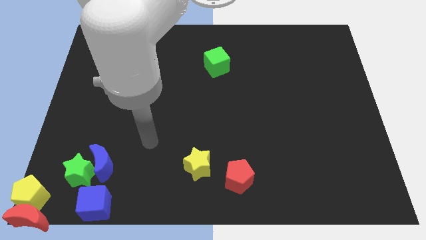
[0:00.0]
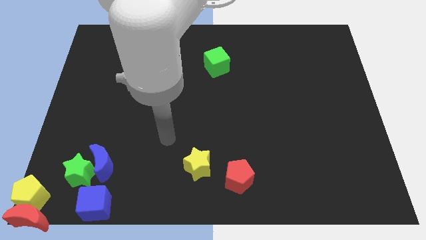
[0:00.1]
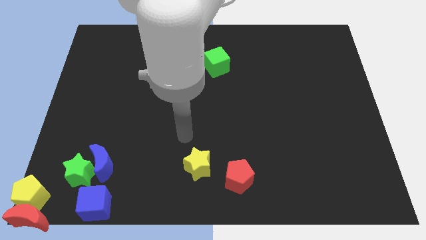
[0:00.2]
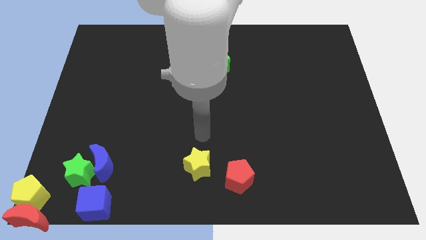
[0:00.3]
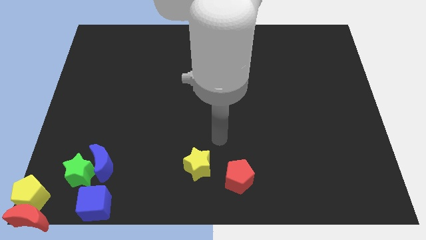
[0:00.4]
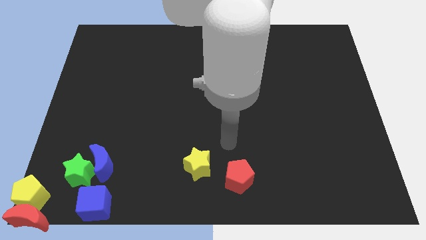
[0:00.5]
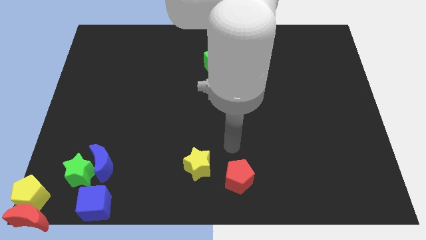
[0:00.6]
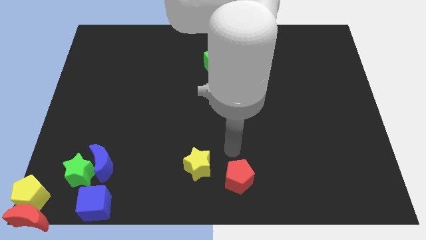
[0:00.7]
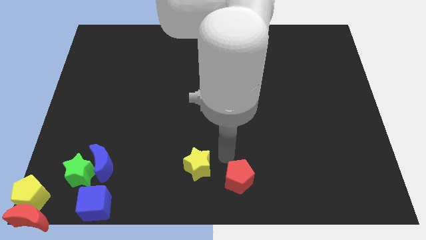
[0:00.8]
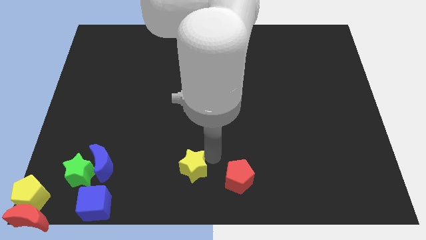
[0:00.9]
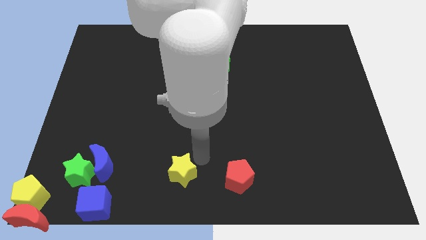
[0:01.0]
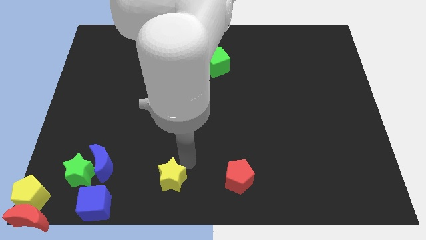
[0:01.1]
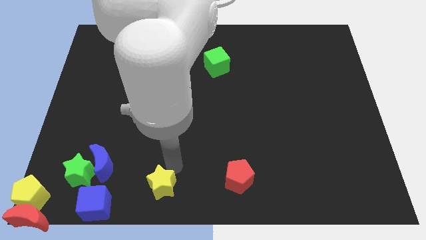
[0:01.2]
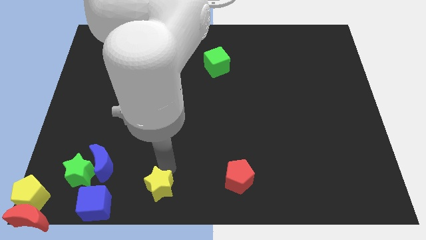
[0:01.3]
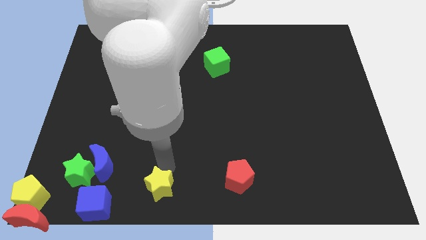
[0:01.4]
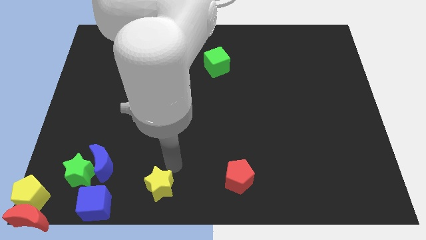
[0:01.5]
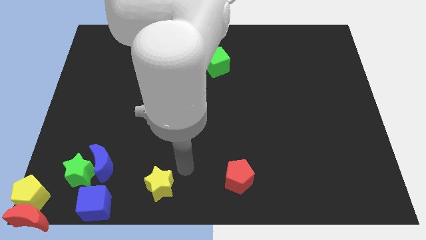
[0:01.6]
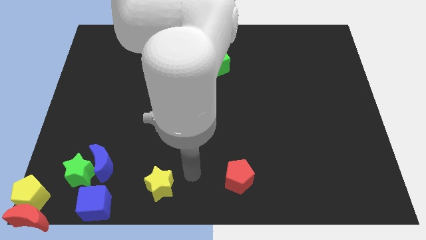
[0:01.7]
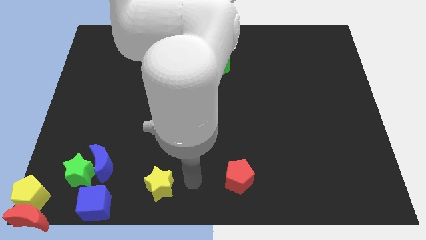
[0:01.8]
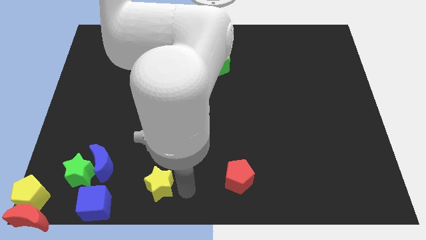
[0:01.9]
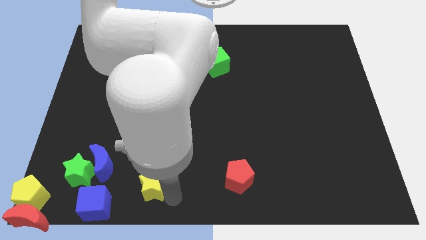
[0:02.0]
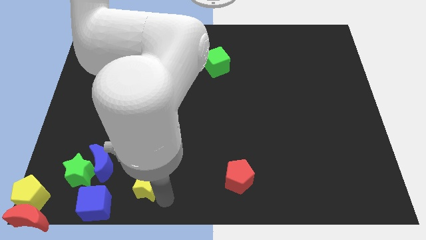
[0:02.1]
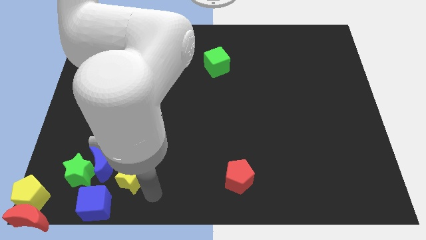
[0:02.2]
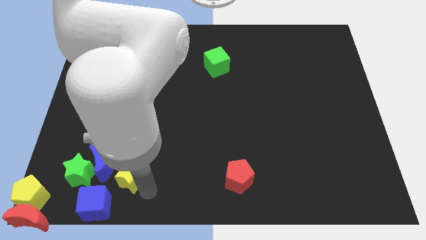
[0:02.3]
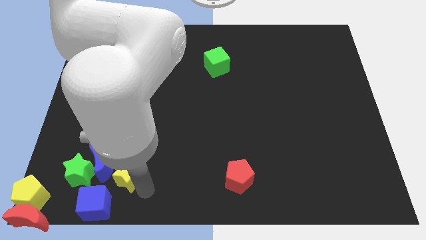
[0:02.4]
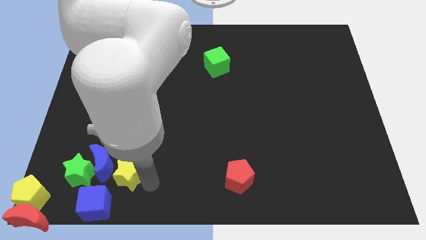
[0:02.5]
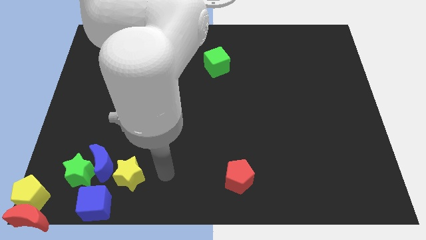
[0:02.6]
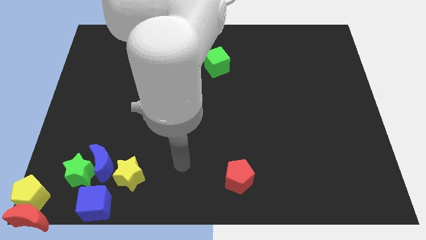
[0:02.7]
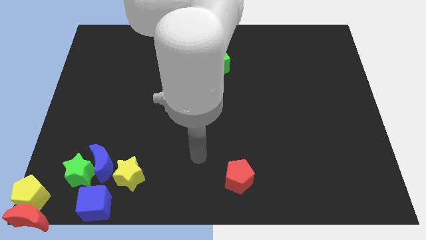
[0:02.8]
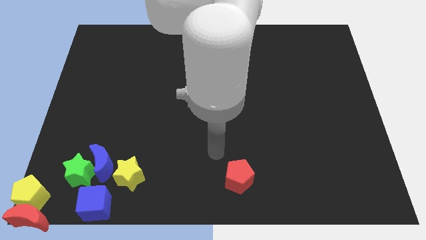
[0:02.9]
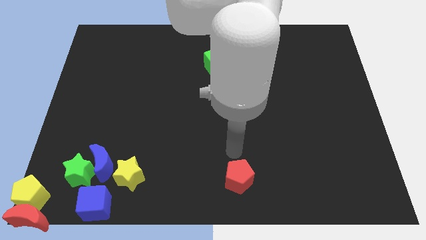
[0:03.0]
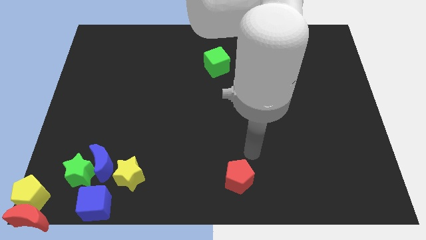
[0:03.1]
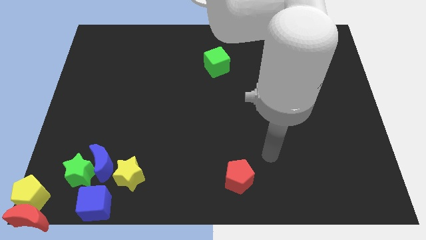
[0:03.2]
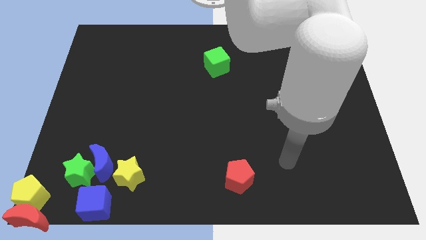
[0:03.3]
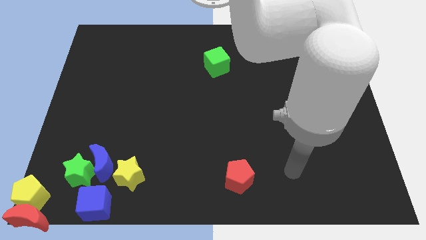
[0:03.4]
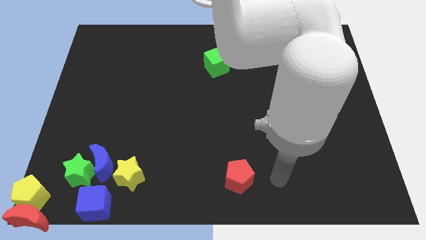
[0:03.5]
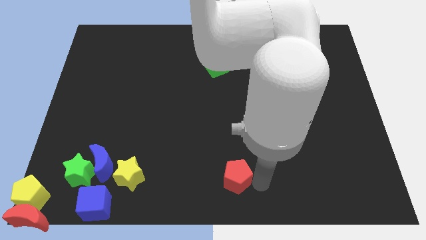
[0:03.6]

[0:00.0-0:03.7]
push the yellow star towards the right side of crescent

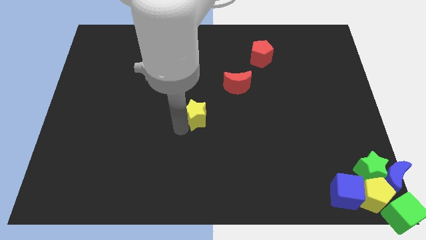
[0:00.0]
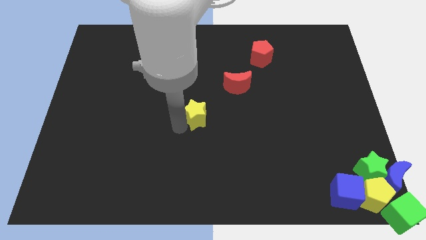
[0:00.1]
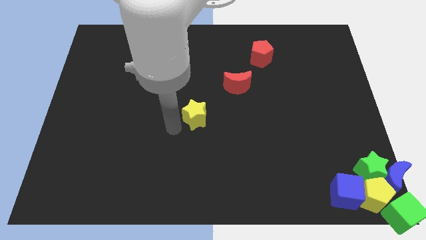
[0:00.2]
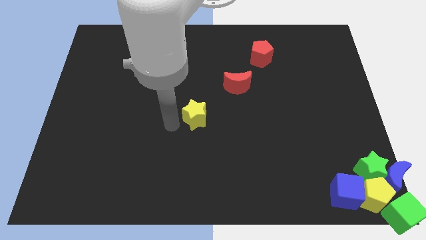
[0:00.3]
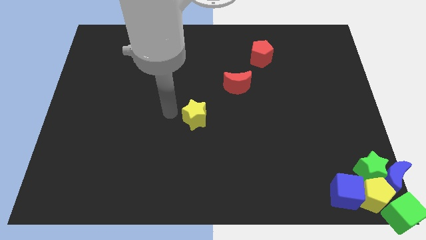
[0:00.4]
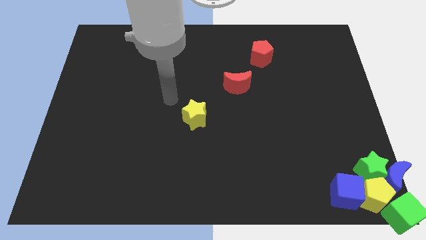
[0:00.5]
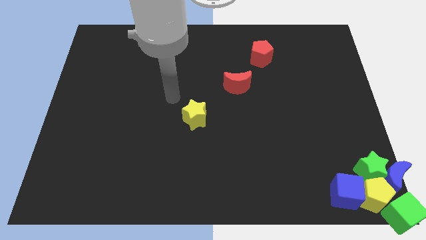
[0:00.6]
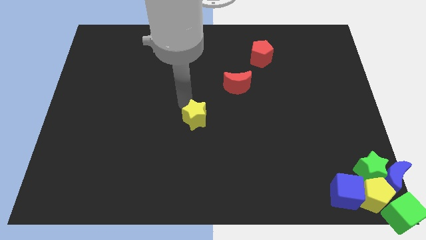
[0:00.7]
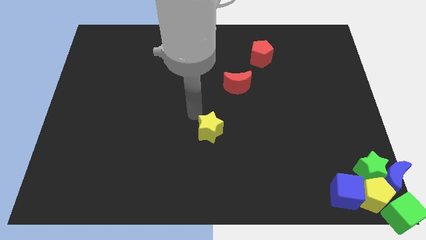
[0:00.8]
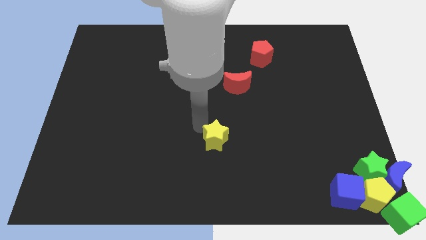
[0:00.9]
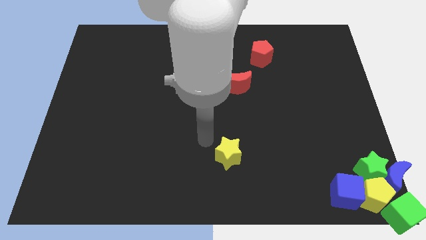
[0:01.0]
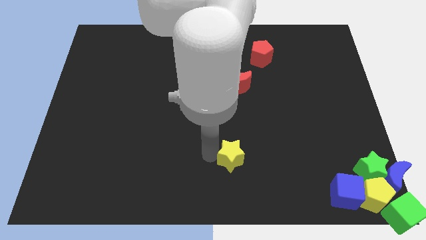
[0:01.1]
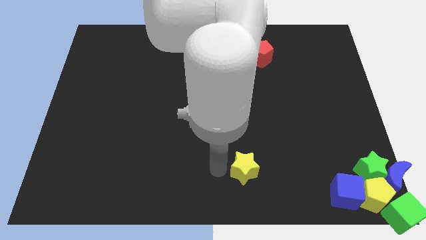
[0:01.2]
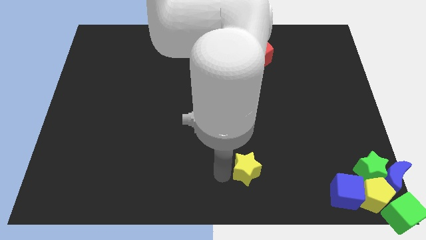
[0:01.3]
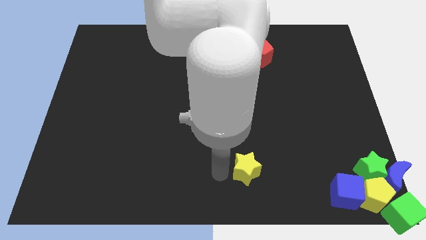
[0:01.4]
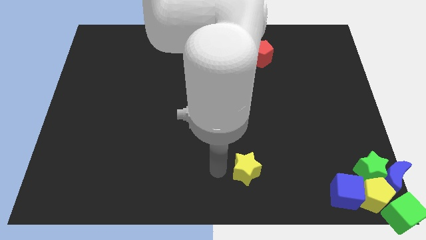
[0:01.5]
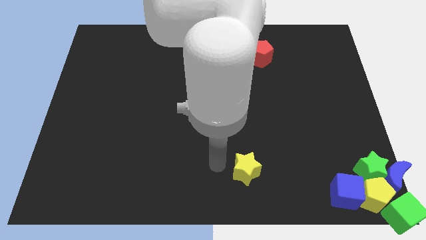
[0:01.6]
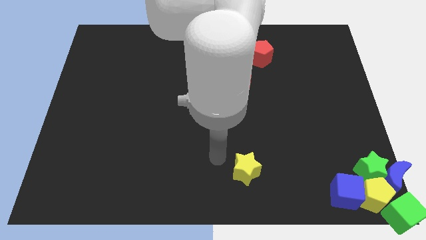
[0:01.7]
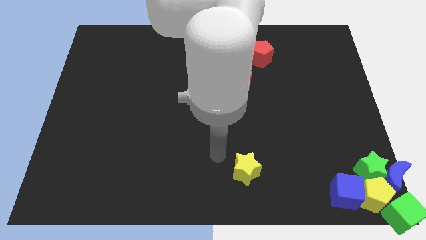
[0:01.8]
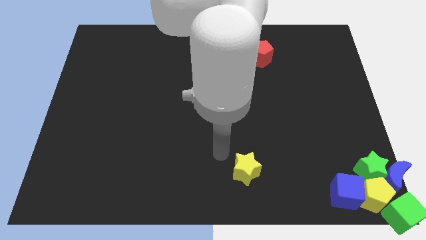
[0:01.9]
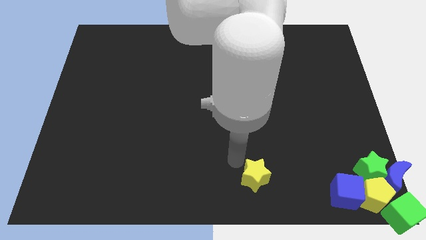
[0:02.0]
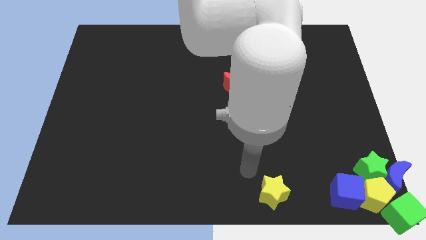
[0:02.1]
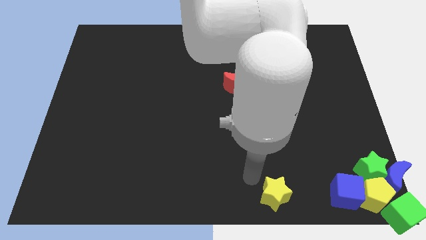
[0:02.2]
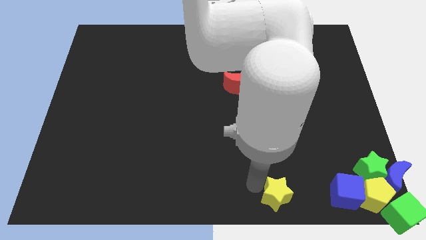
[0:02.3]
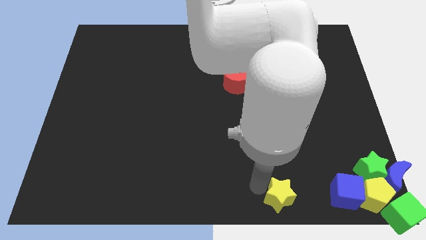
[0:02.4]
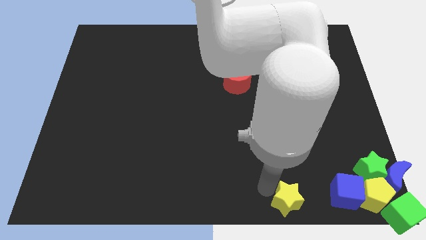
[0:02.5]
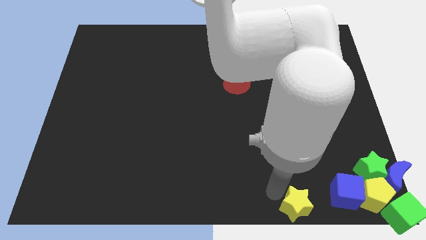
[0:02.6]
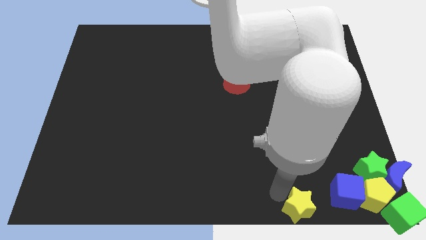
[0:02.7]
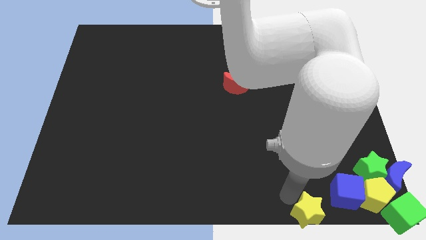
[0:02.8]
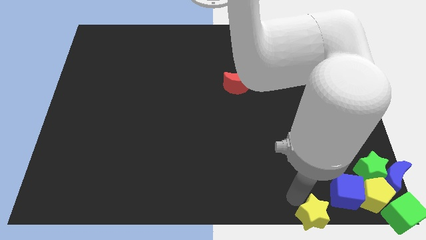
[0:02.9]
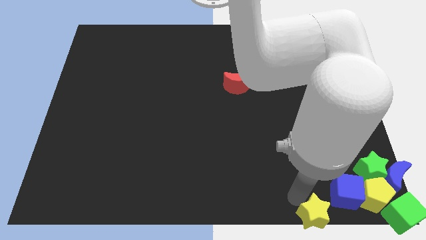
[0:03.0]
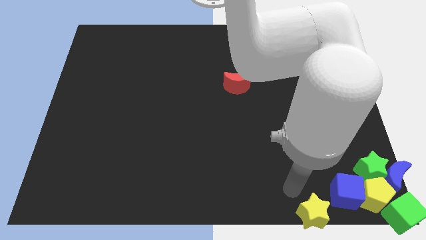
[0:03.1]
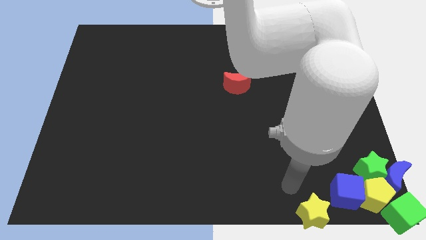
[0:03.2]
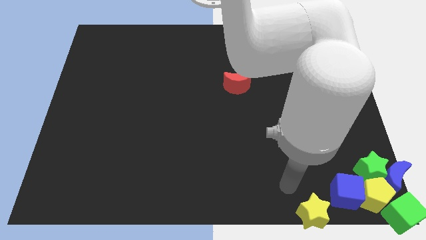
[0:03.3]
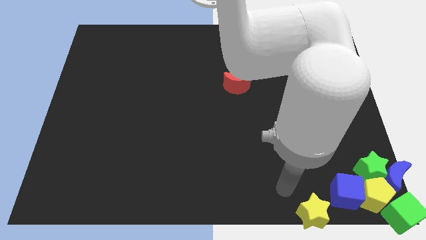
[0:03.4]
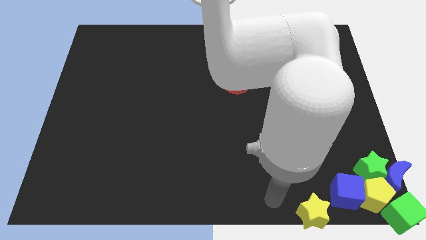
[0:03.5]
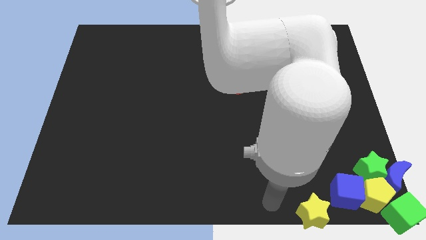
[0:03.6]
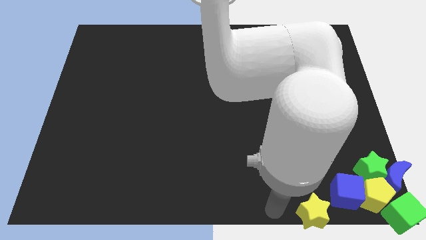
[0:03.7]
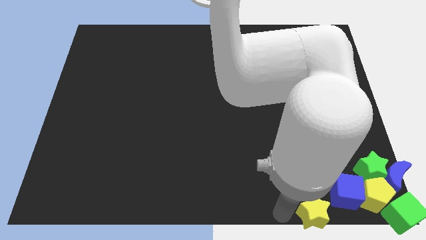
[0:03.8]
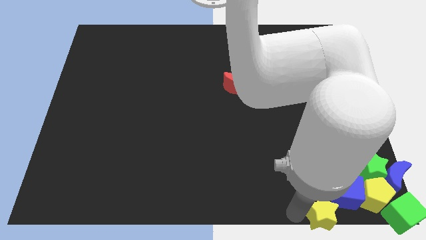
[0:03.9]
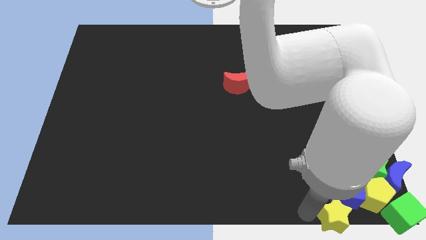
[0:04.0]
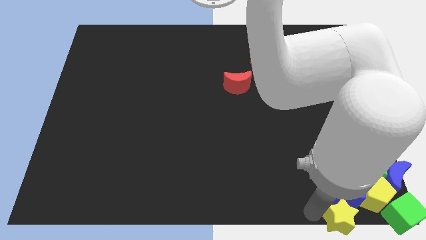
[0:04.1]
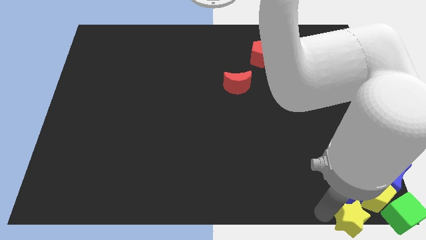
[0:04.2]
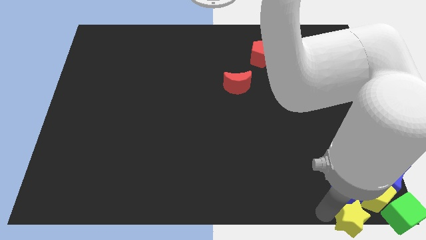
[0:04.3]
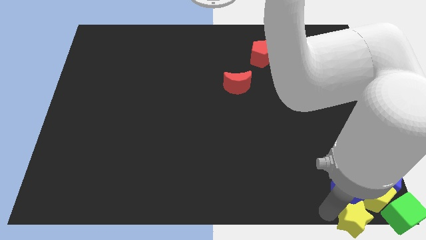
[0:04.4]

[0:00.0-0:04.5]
push the yellow star to the group of blocks

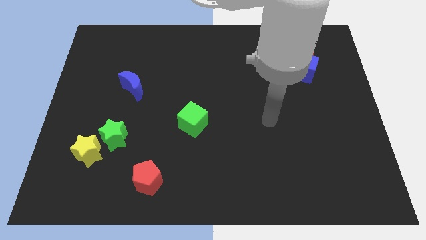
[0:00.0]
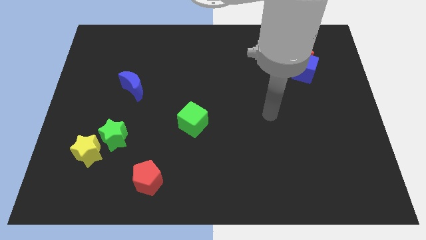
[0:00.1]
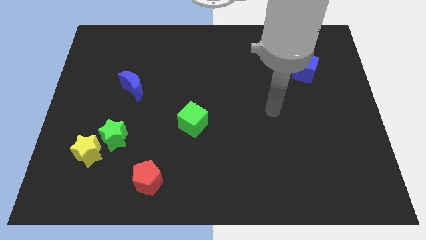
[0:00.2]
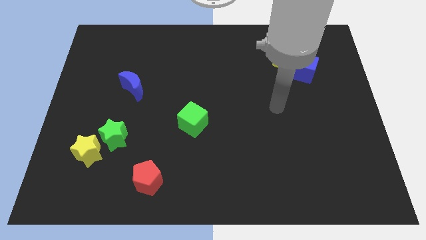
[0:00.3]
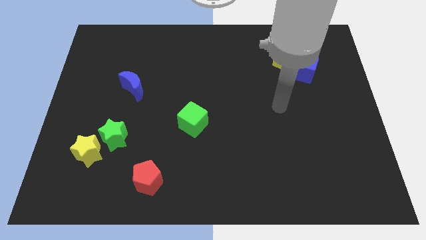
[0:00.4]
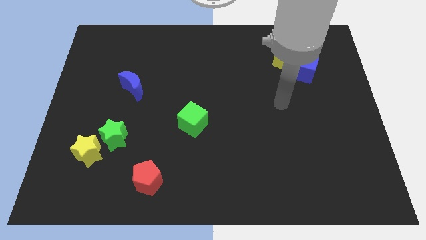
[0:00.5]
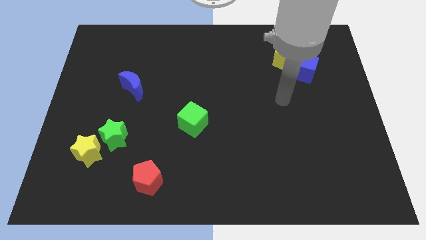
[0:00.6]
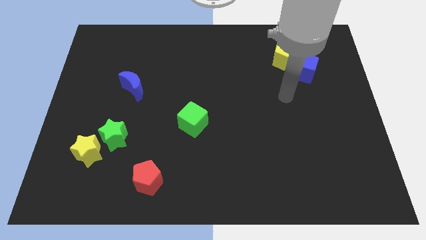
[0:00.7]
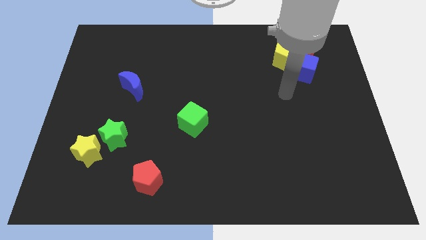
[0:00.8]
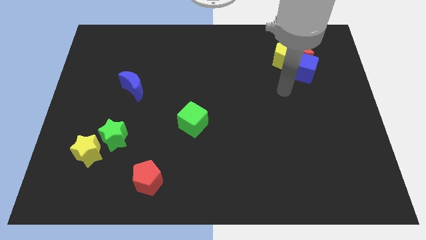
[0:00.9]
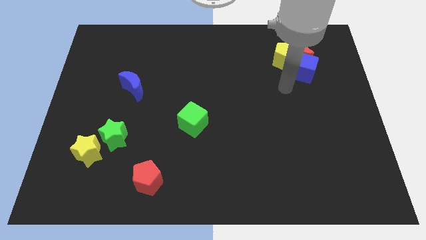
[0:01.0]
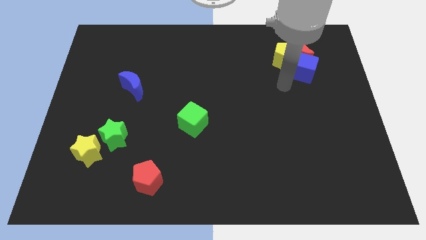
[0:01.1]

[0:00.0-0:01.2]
move arm close to blue cube
